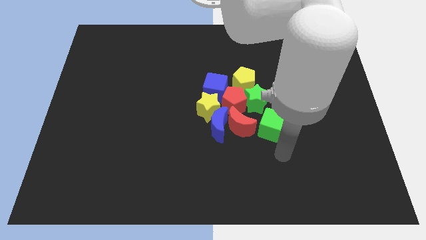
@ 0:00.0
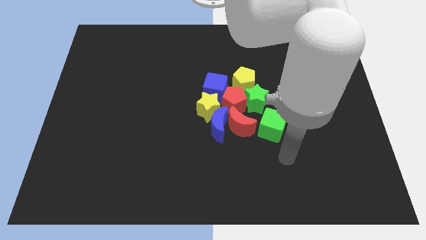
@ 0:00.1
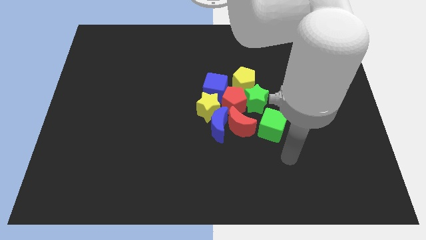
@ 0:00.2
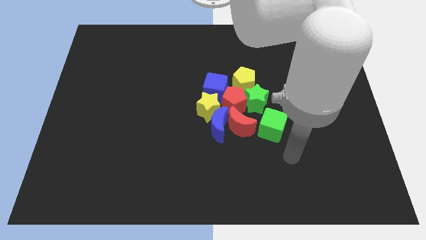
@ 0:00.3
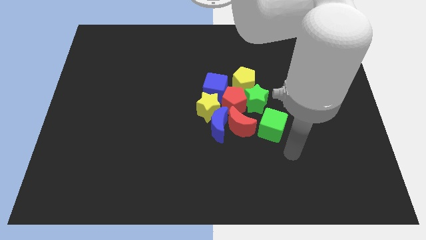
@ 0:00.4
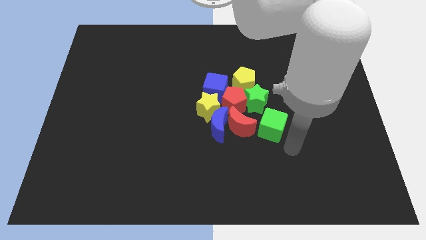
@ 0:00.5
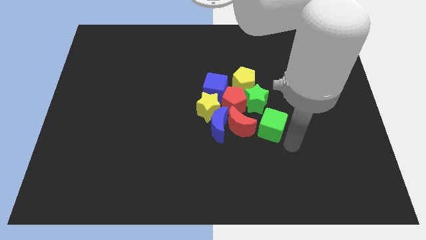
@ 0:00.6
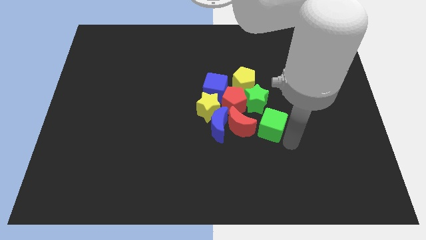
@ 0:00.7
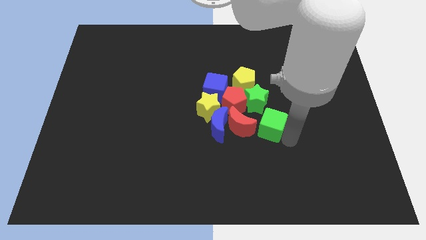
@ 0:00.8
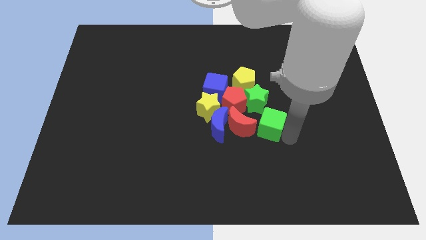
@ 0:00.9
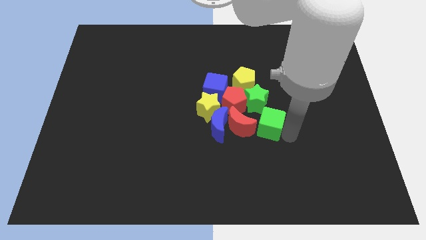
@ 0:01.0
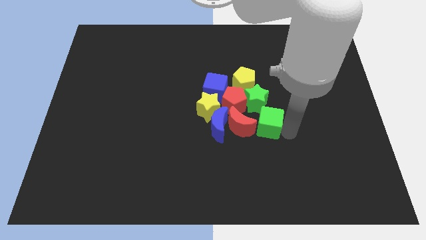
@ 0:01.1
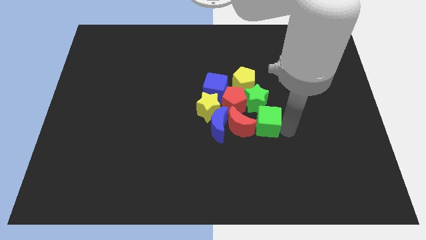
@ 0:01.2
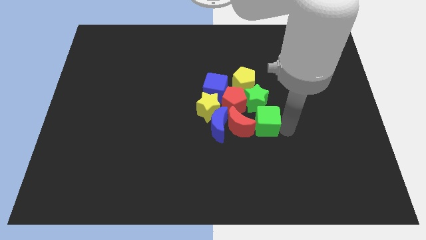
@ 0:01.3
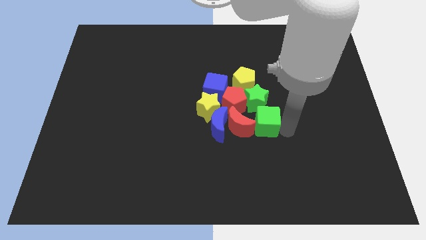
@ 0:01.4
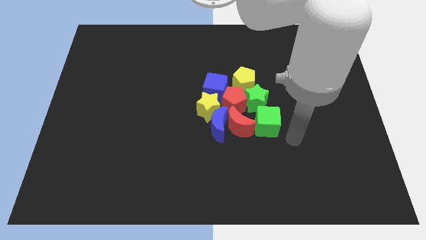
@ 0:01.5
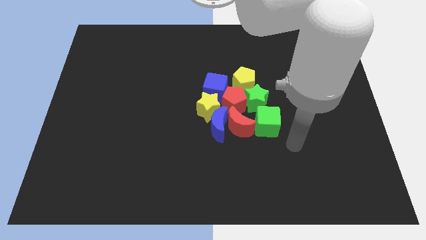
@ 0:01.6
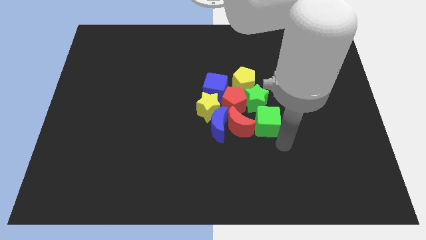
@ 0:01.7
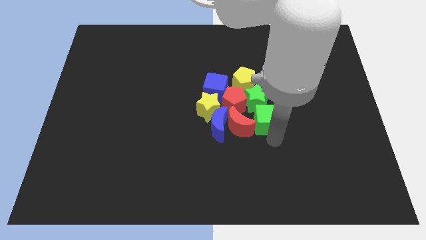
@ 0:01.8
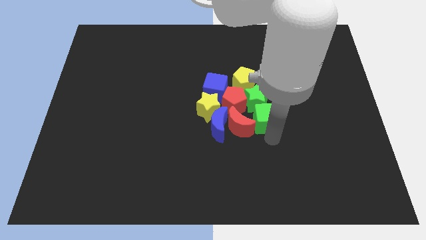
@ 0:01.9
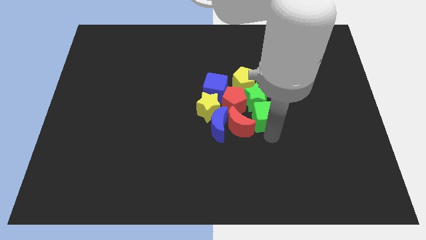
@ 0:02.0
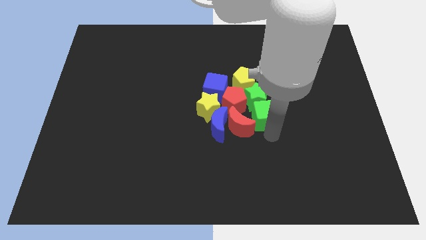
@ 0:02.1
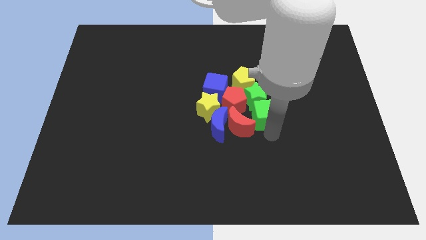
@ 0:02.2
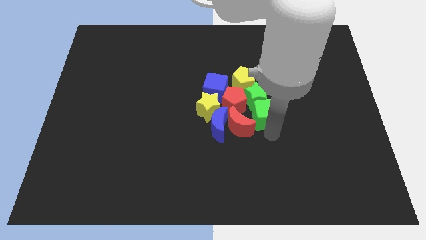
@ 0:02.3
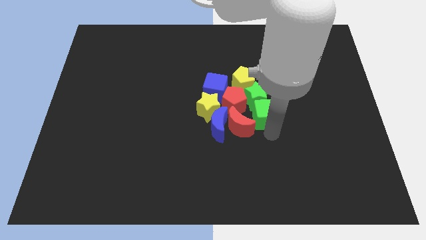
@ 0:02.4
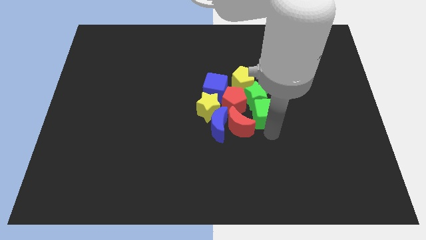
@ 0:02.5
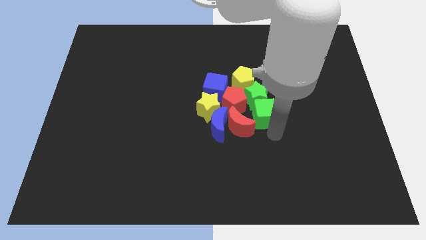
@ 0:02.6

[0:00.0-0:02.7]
slide the green cube into the bottom of the green star

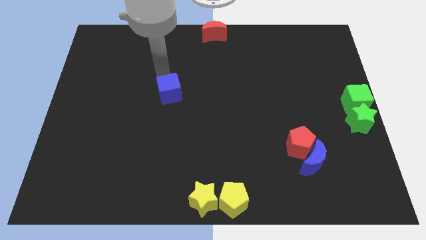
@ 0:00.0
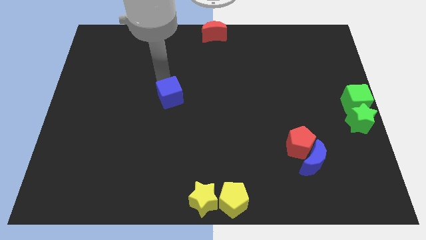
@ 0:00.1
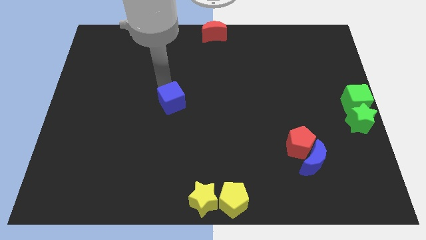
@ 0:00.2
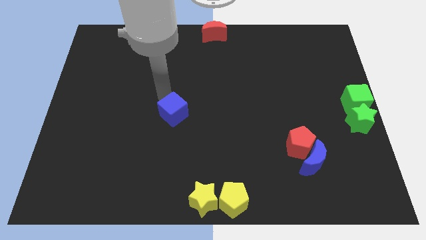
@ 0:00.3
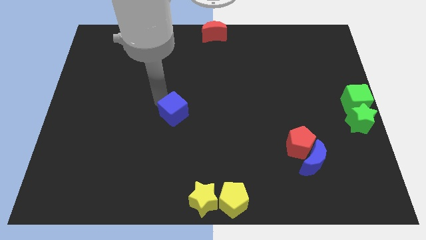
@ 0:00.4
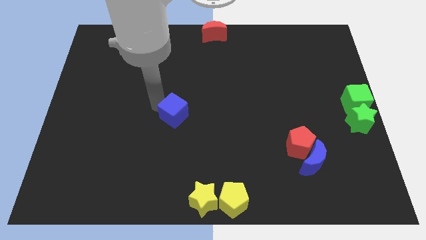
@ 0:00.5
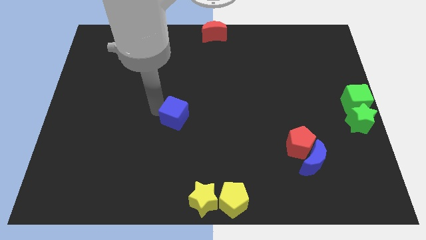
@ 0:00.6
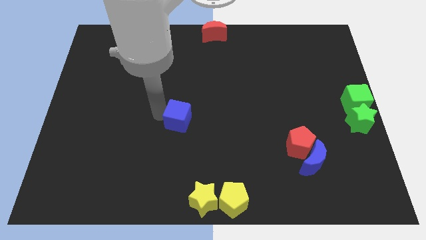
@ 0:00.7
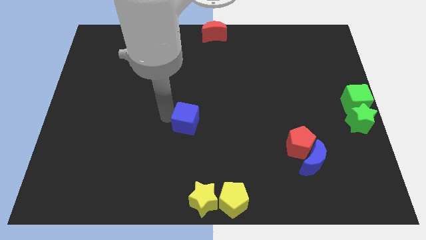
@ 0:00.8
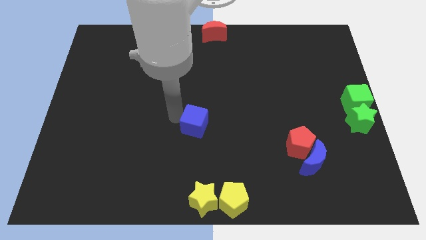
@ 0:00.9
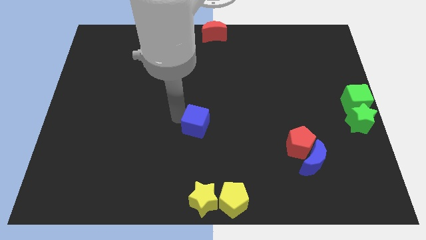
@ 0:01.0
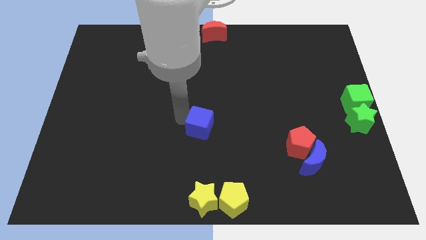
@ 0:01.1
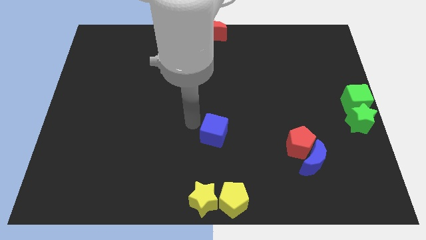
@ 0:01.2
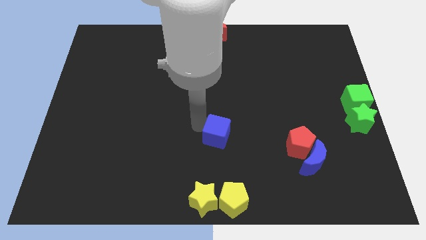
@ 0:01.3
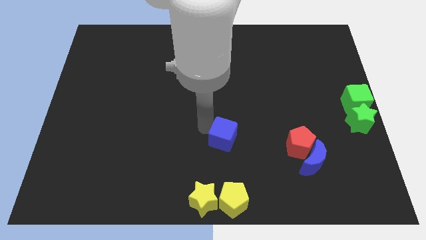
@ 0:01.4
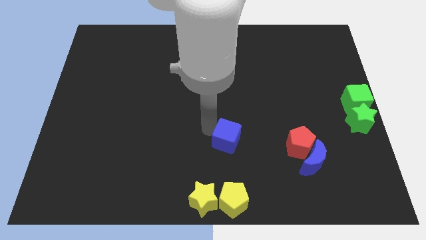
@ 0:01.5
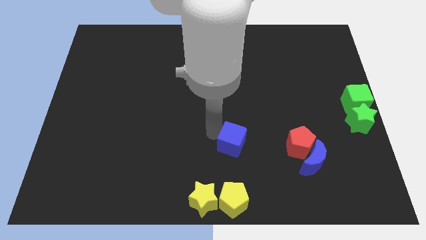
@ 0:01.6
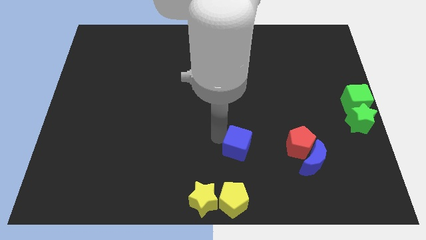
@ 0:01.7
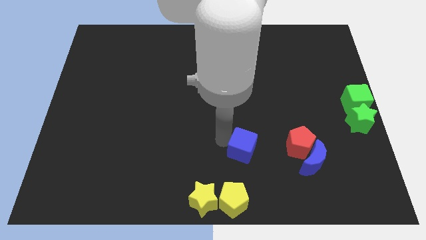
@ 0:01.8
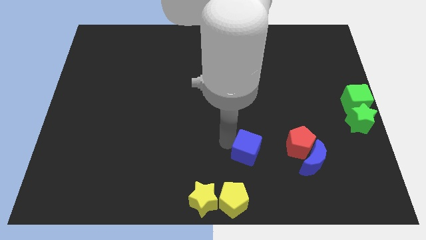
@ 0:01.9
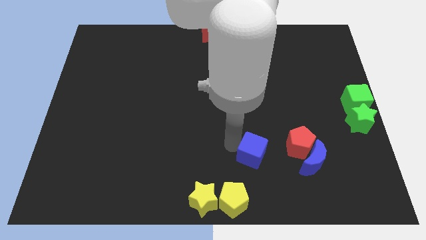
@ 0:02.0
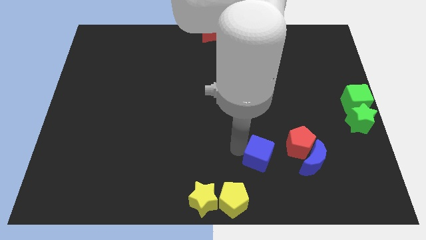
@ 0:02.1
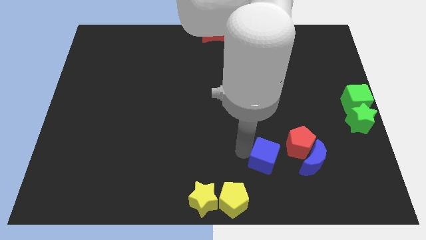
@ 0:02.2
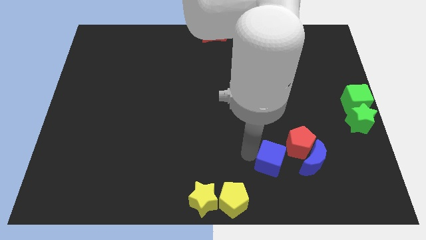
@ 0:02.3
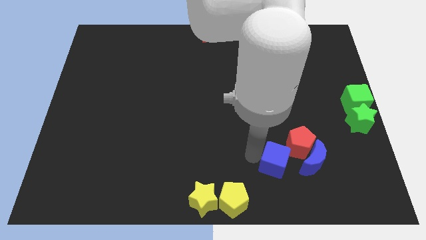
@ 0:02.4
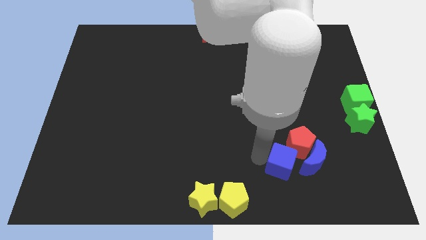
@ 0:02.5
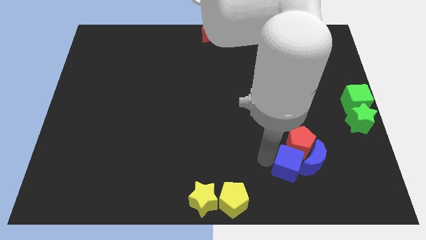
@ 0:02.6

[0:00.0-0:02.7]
place the blue cube left to the blue crescent

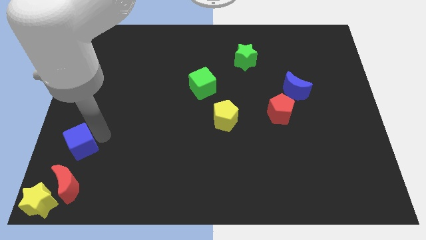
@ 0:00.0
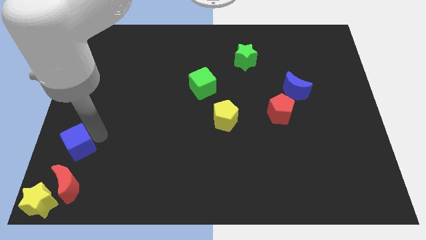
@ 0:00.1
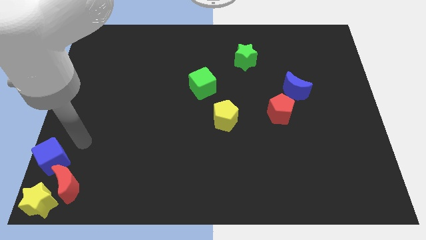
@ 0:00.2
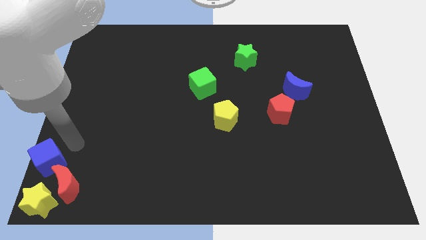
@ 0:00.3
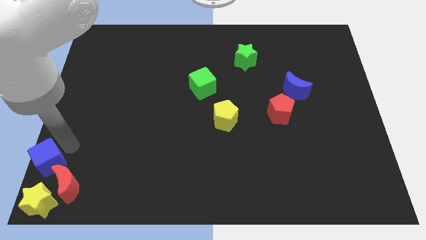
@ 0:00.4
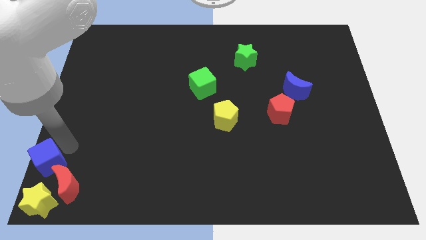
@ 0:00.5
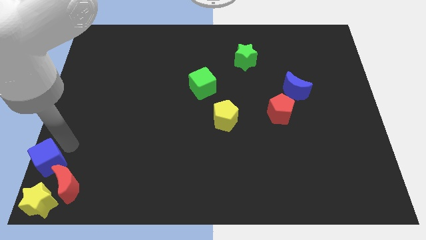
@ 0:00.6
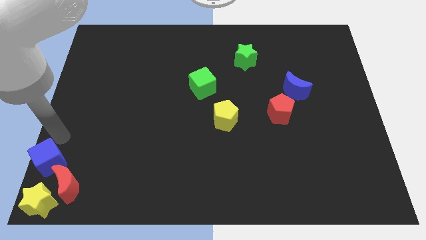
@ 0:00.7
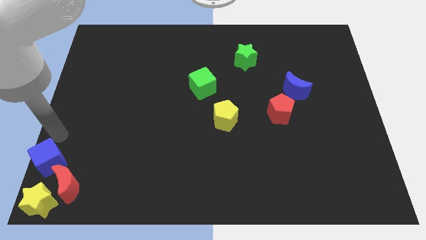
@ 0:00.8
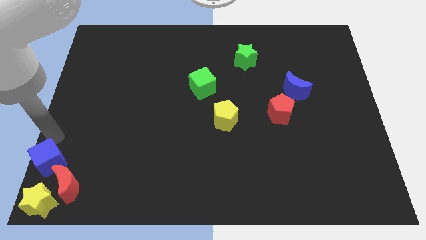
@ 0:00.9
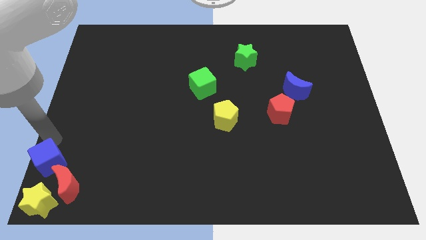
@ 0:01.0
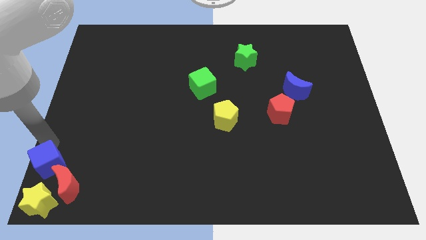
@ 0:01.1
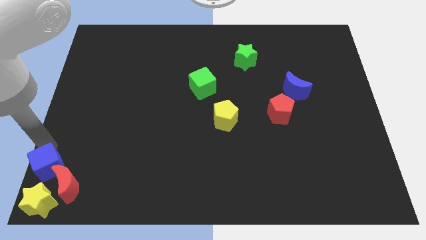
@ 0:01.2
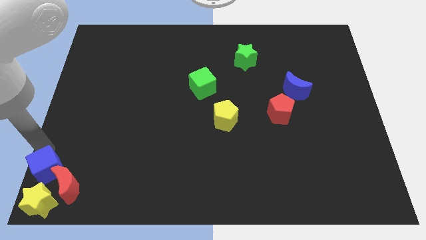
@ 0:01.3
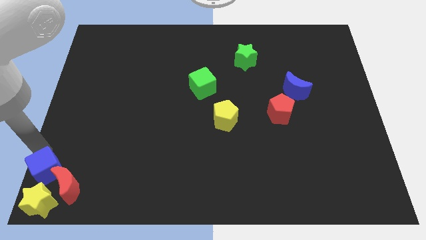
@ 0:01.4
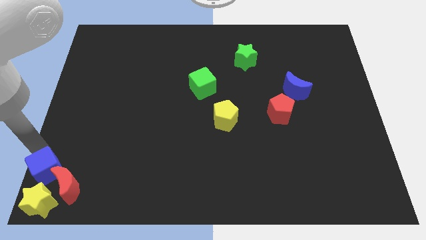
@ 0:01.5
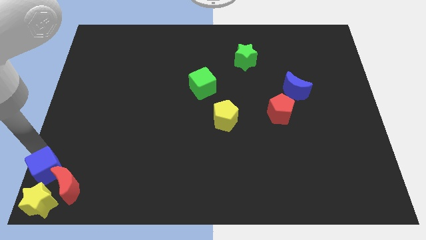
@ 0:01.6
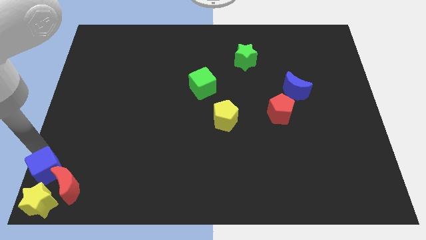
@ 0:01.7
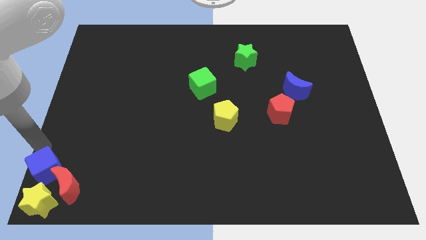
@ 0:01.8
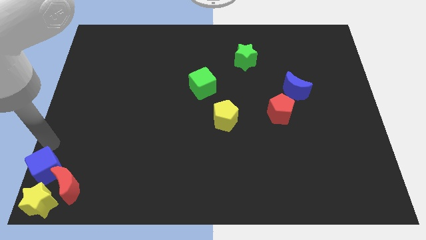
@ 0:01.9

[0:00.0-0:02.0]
move the blue cube into the red moon

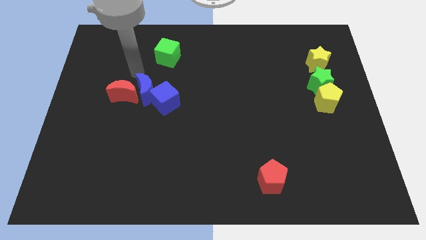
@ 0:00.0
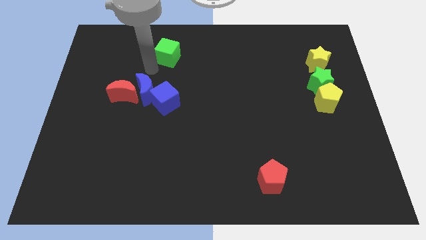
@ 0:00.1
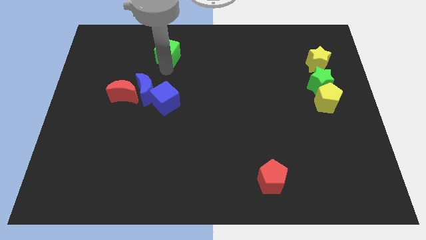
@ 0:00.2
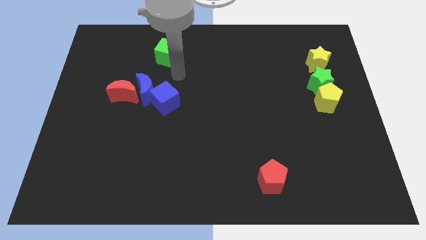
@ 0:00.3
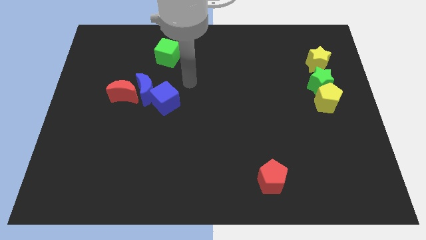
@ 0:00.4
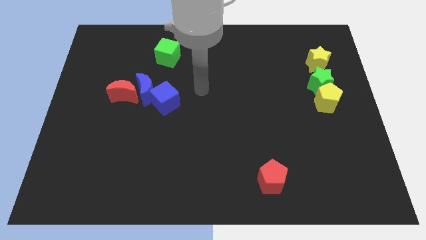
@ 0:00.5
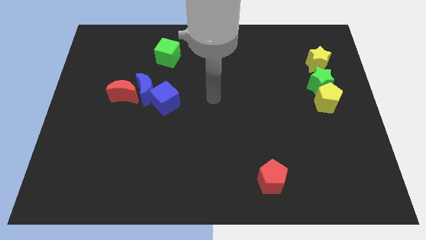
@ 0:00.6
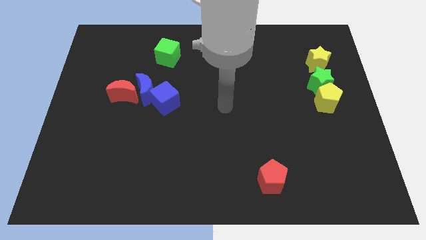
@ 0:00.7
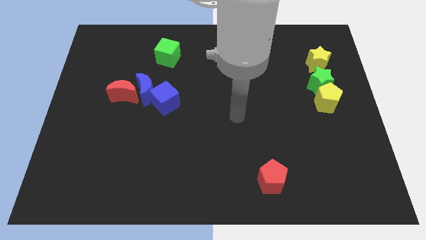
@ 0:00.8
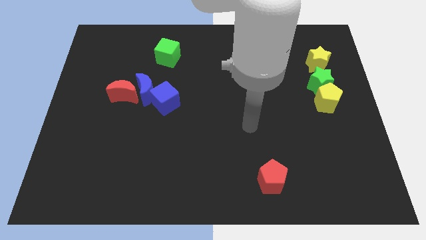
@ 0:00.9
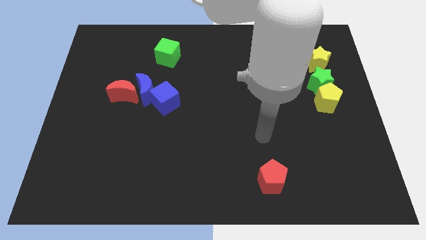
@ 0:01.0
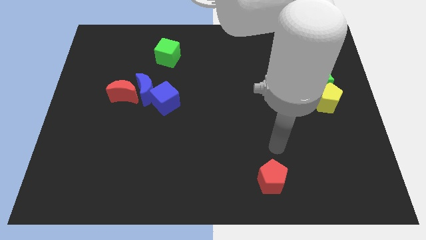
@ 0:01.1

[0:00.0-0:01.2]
place your arm at the top of red pentagon

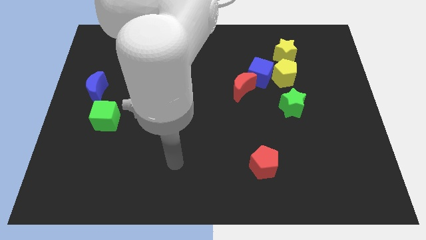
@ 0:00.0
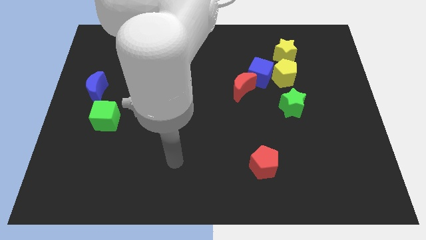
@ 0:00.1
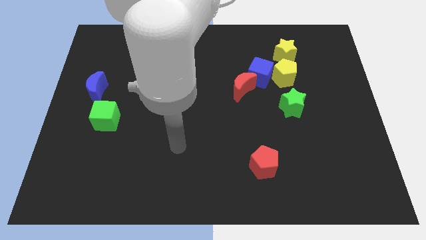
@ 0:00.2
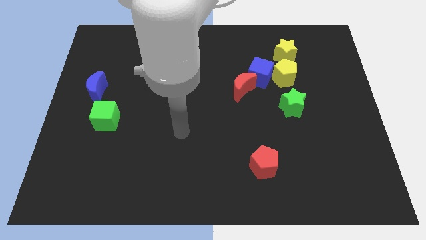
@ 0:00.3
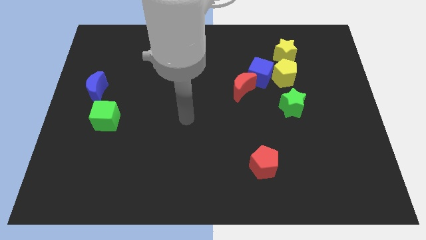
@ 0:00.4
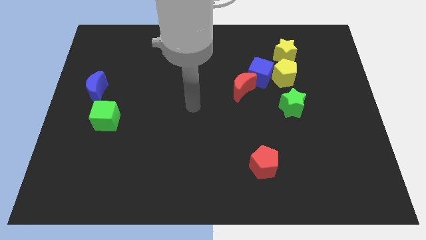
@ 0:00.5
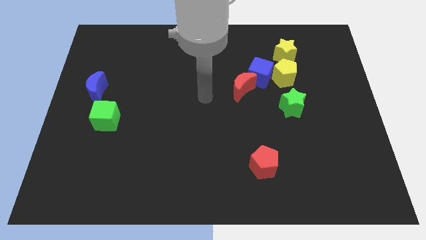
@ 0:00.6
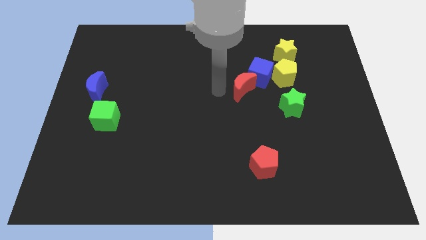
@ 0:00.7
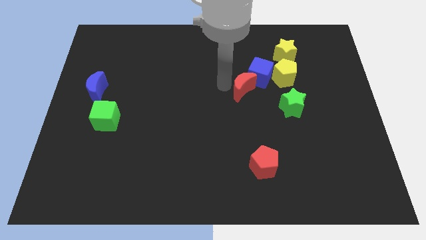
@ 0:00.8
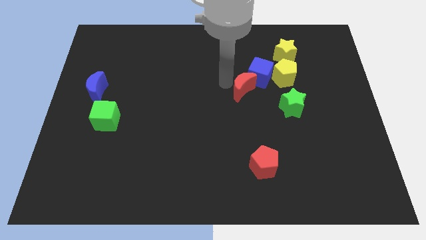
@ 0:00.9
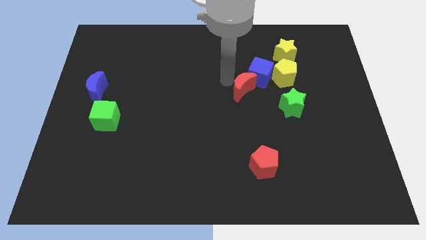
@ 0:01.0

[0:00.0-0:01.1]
move your arm towards the red crescent
